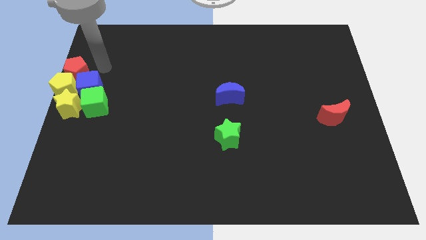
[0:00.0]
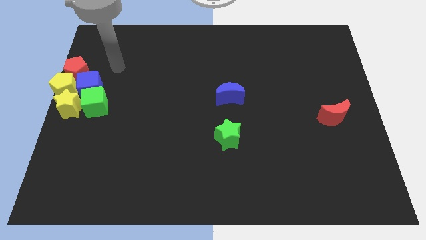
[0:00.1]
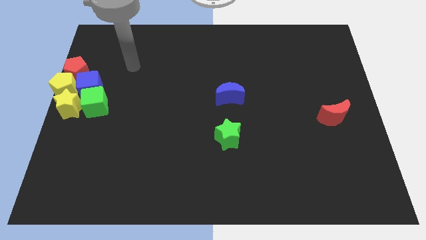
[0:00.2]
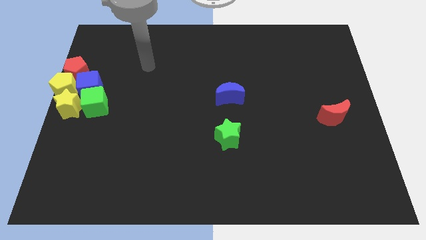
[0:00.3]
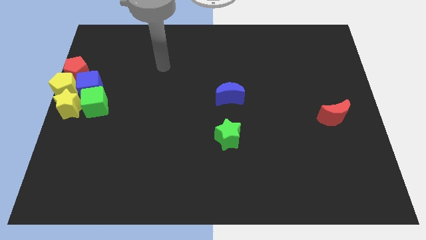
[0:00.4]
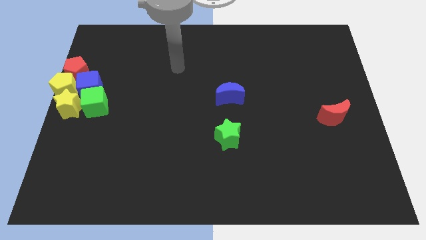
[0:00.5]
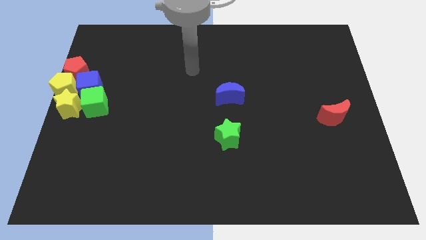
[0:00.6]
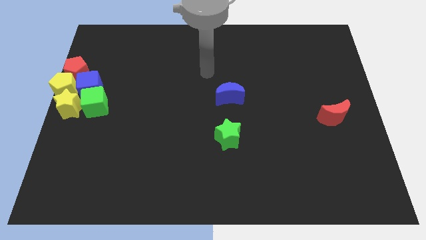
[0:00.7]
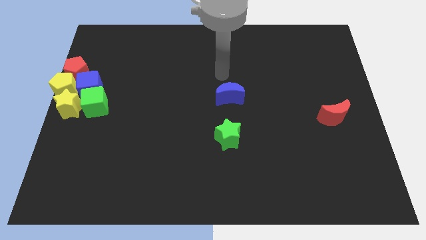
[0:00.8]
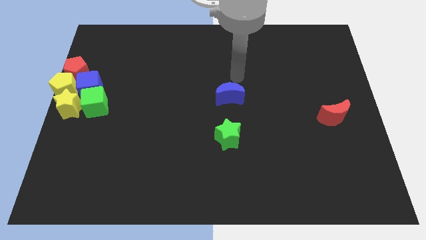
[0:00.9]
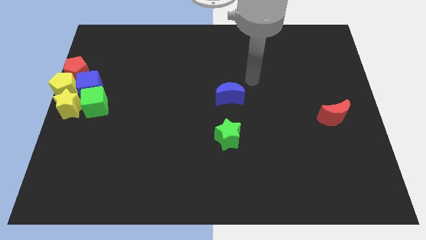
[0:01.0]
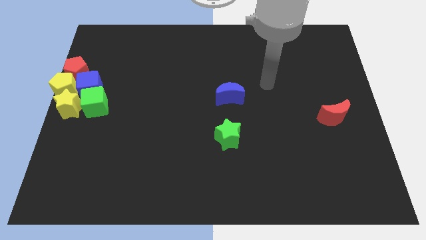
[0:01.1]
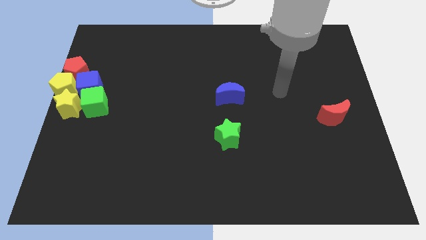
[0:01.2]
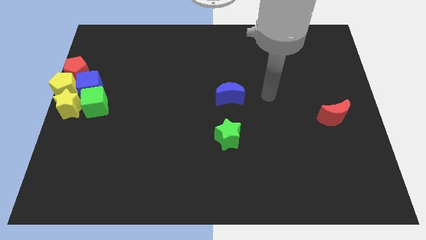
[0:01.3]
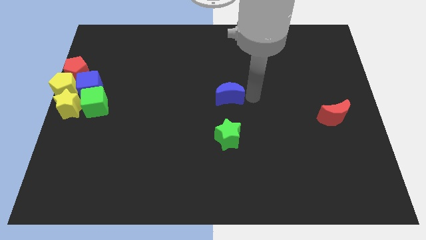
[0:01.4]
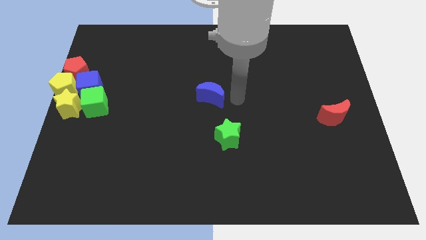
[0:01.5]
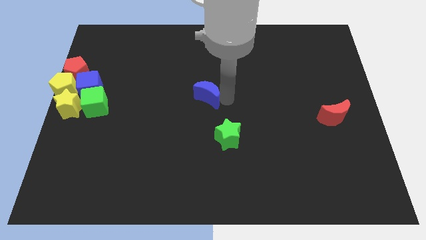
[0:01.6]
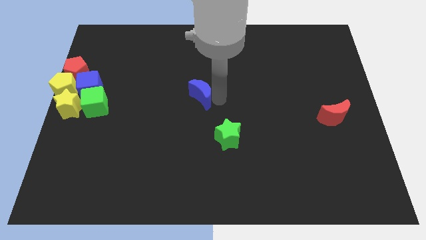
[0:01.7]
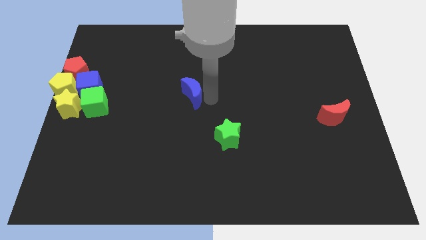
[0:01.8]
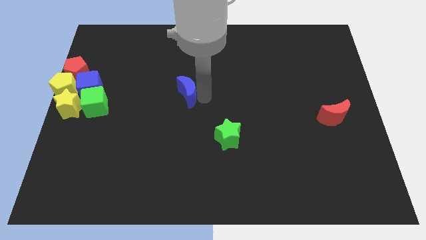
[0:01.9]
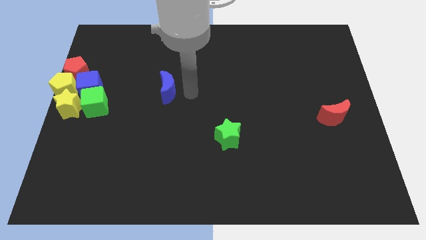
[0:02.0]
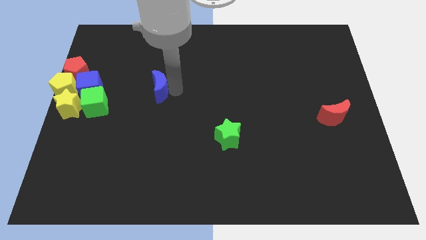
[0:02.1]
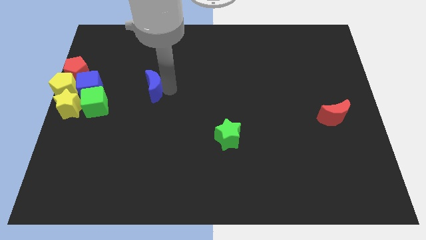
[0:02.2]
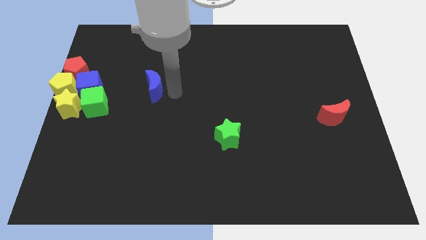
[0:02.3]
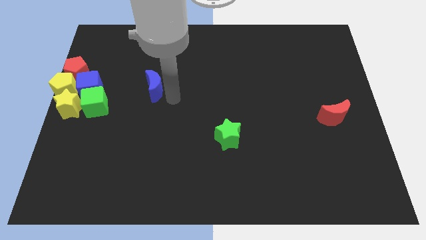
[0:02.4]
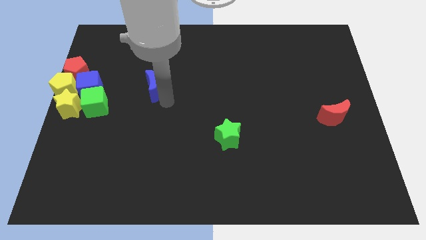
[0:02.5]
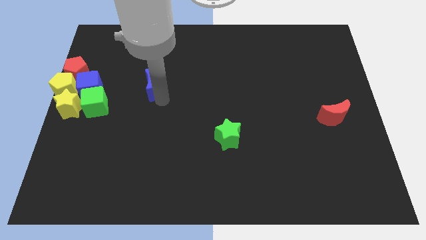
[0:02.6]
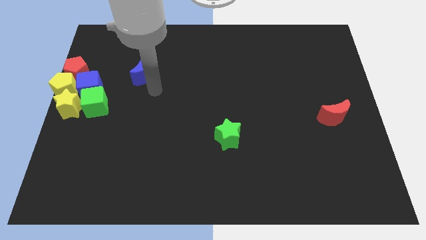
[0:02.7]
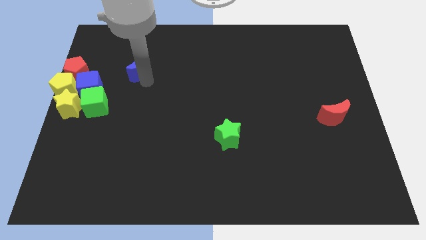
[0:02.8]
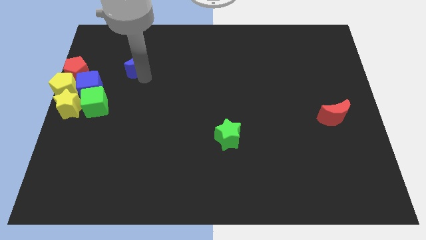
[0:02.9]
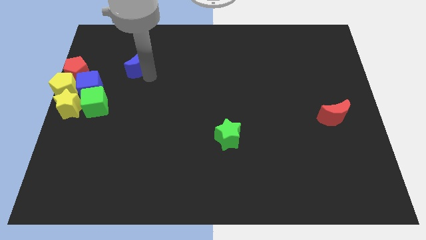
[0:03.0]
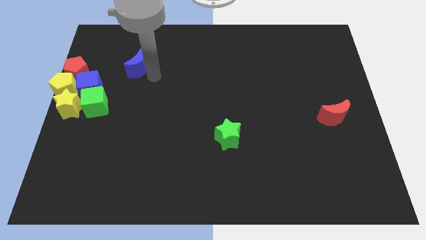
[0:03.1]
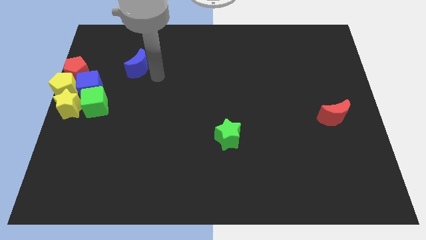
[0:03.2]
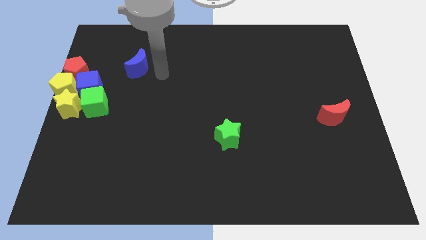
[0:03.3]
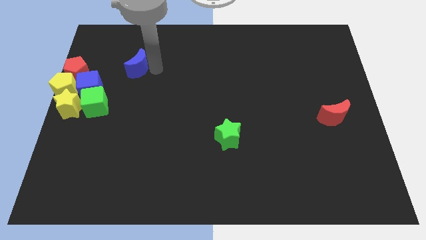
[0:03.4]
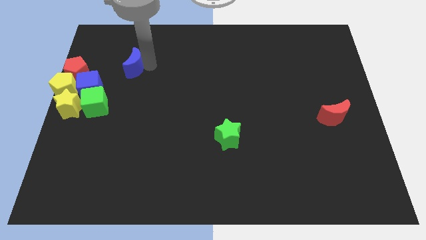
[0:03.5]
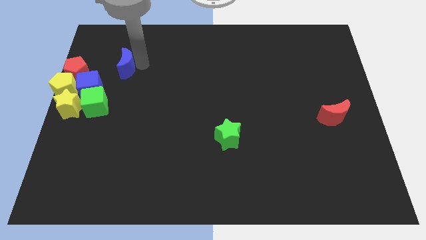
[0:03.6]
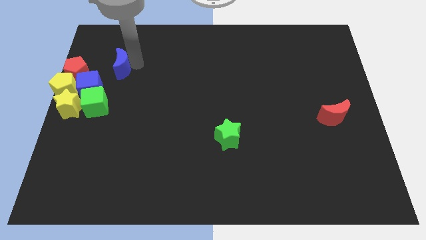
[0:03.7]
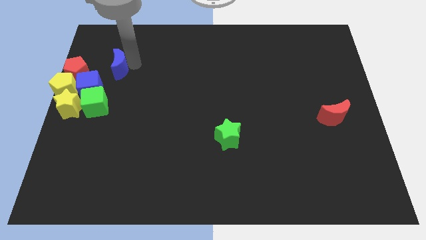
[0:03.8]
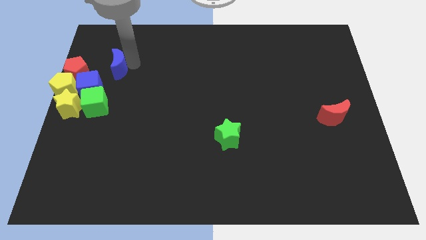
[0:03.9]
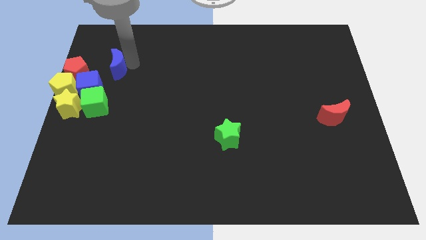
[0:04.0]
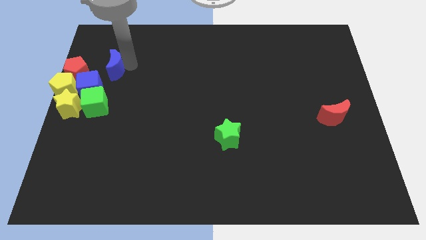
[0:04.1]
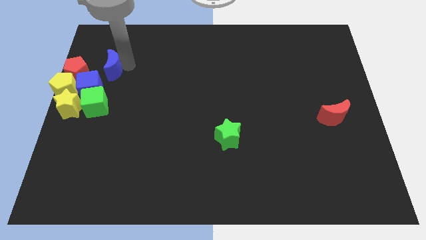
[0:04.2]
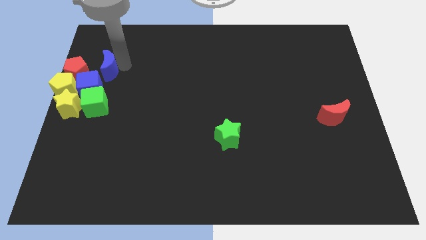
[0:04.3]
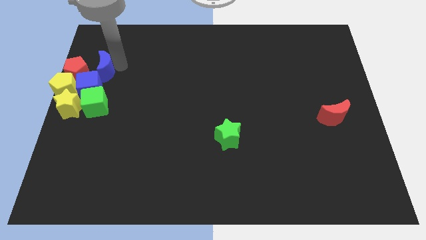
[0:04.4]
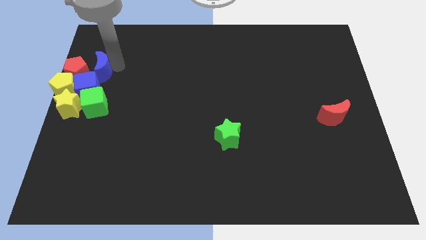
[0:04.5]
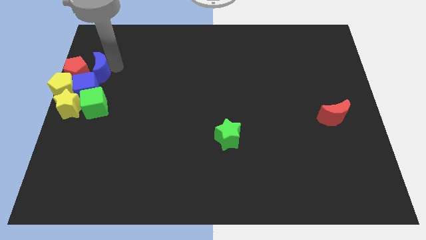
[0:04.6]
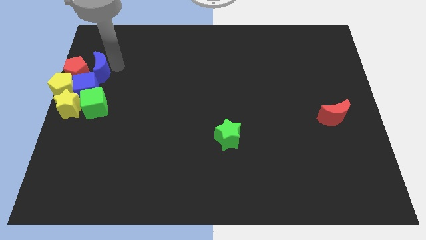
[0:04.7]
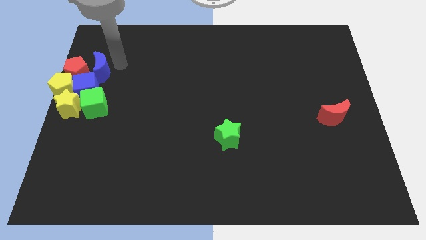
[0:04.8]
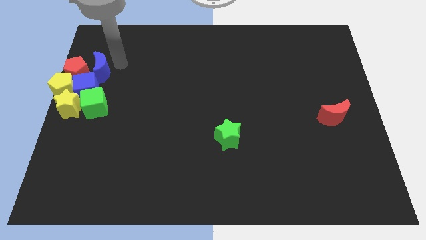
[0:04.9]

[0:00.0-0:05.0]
push the blue crescent into the blue cube

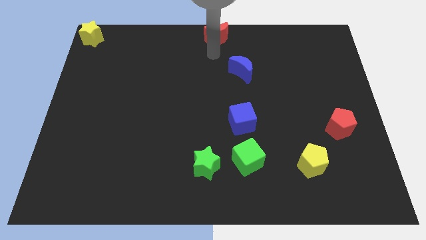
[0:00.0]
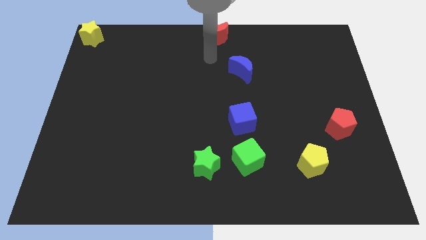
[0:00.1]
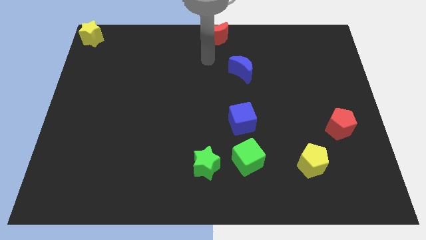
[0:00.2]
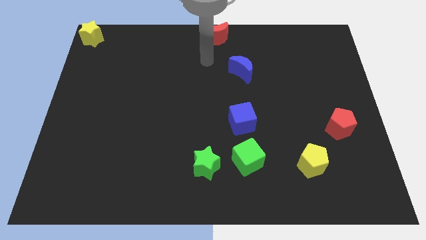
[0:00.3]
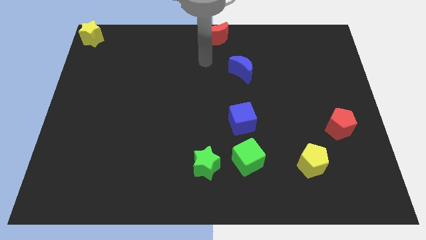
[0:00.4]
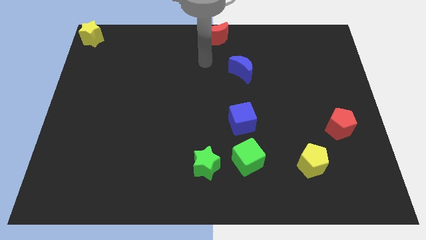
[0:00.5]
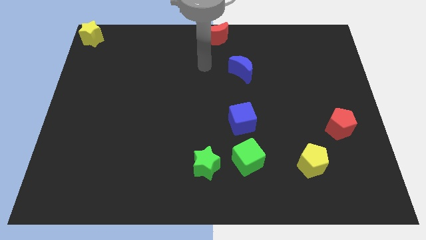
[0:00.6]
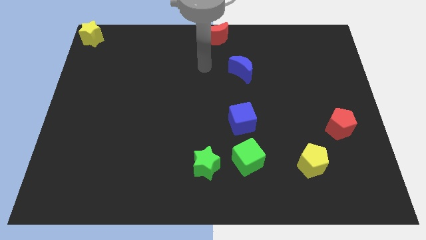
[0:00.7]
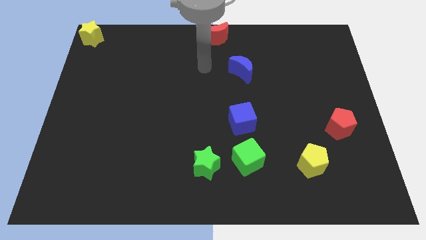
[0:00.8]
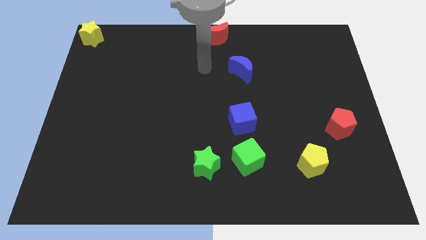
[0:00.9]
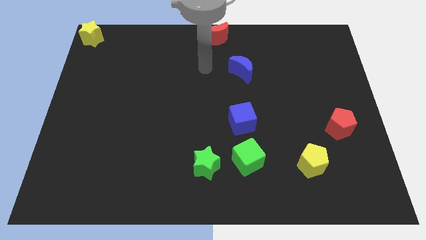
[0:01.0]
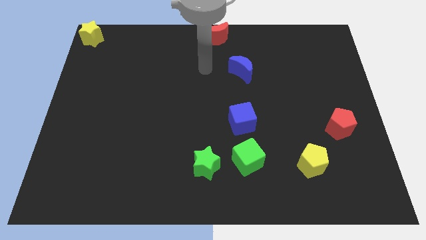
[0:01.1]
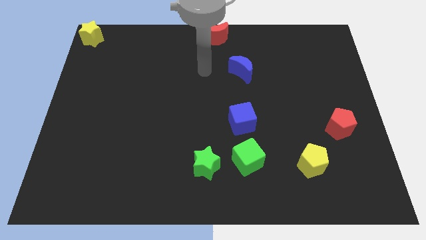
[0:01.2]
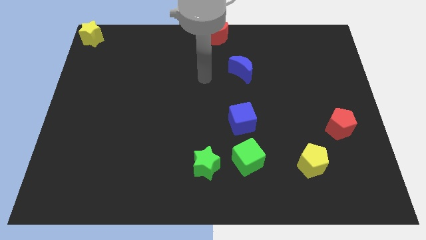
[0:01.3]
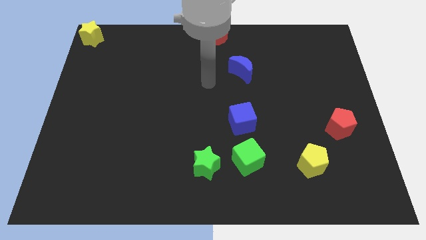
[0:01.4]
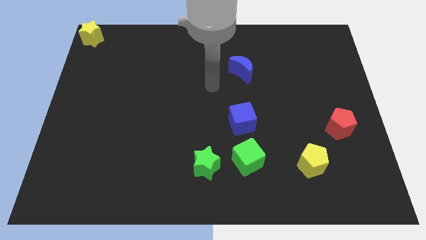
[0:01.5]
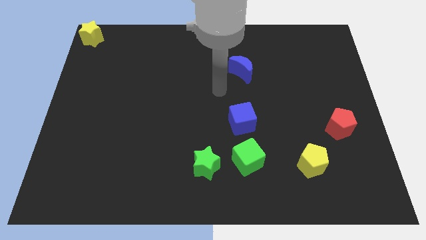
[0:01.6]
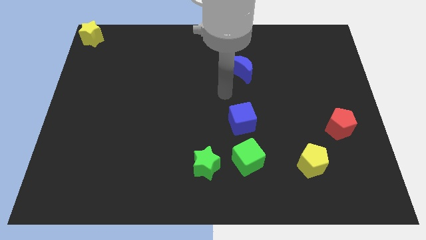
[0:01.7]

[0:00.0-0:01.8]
move your arm towards the center of the board

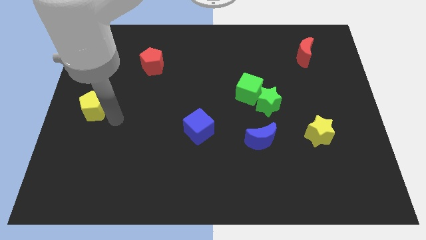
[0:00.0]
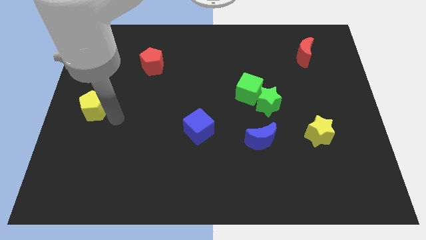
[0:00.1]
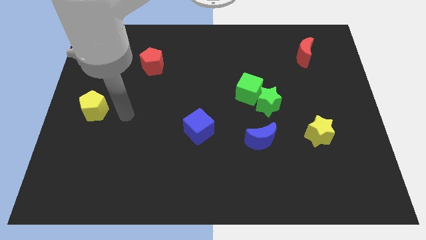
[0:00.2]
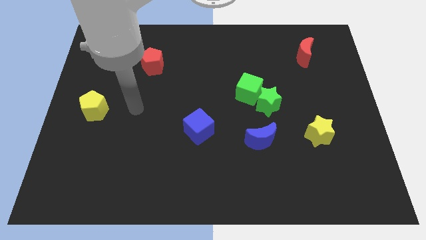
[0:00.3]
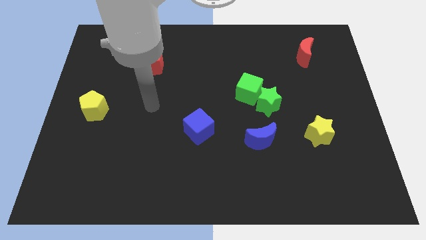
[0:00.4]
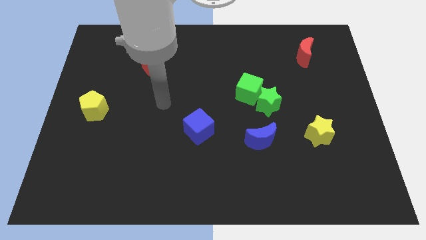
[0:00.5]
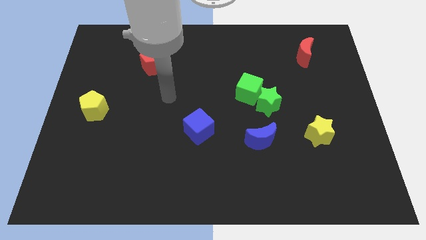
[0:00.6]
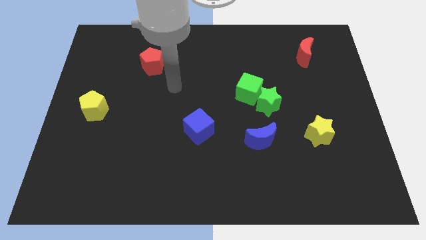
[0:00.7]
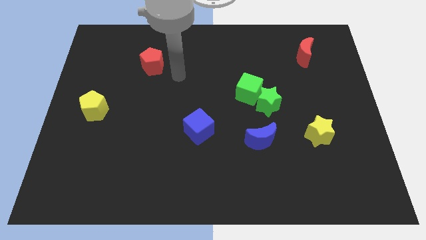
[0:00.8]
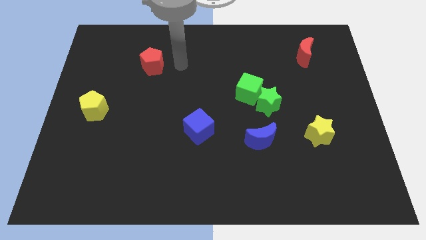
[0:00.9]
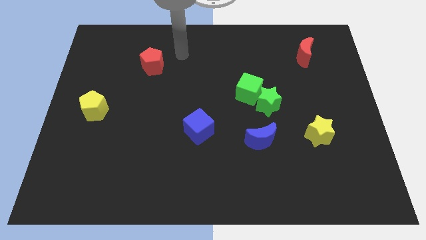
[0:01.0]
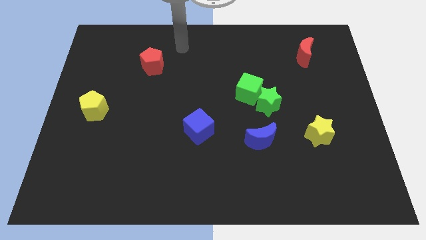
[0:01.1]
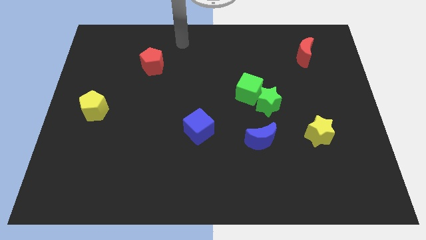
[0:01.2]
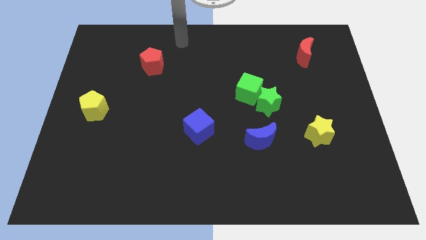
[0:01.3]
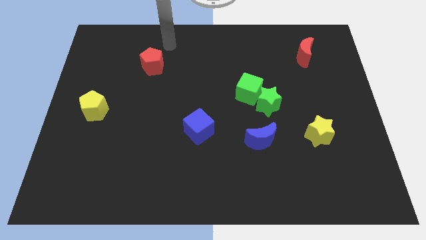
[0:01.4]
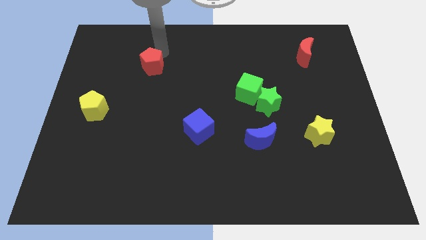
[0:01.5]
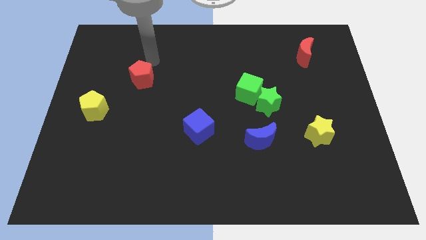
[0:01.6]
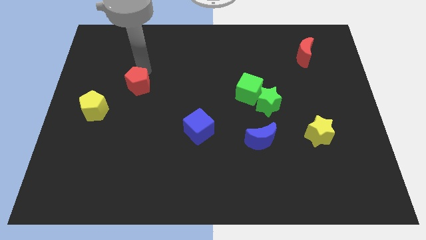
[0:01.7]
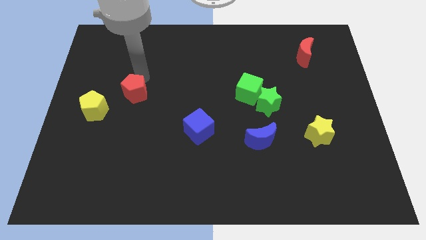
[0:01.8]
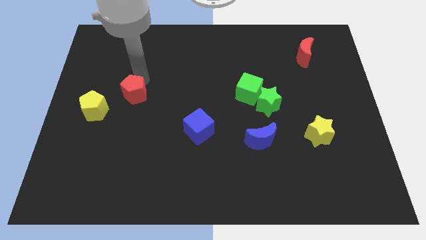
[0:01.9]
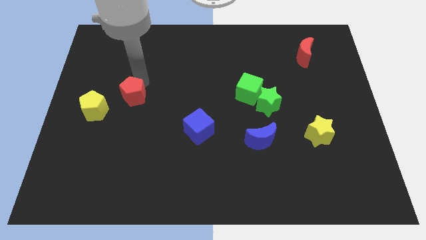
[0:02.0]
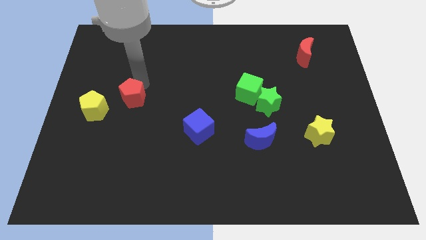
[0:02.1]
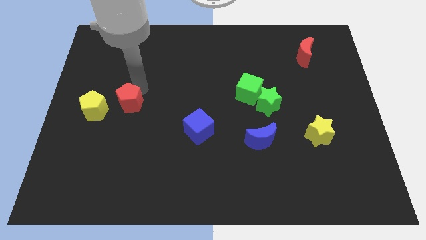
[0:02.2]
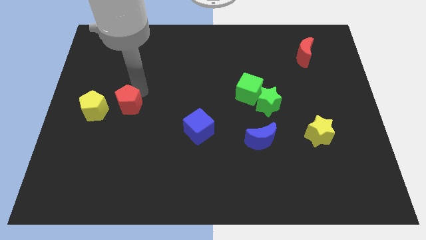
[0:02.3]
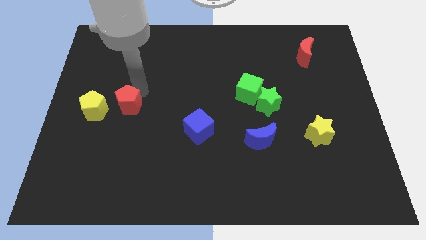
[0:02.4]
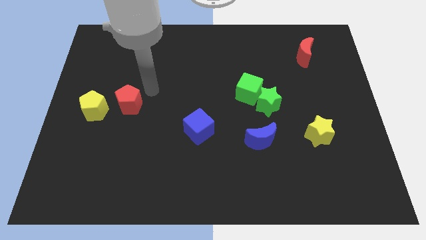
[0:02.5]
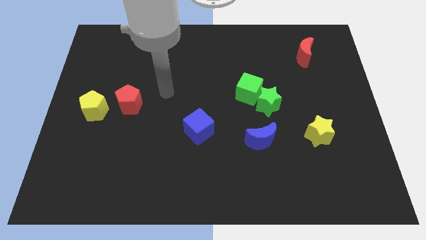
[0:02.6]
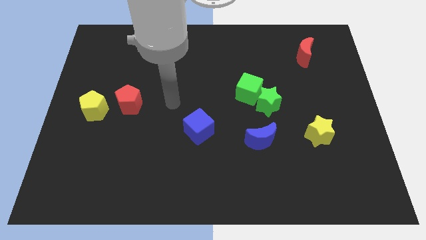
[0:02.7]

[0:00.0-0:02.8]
move the red pentagon to the right of the yellow pentagon
